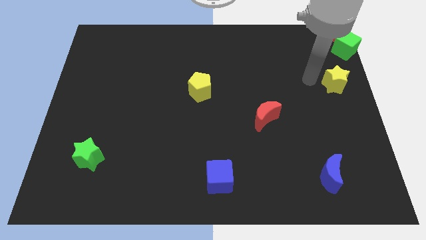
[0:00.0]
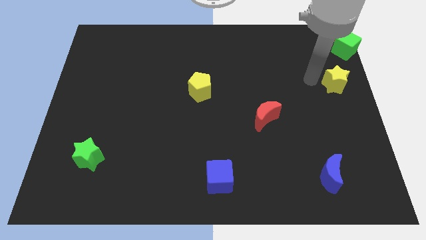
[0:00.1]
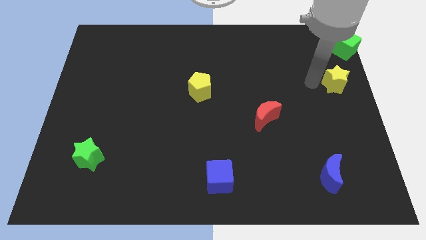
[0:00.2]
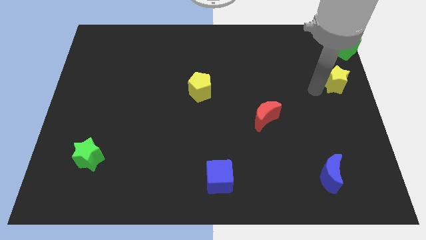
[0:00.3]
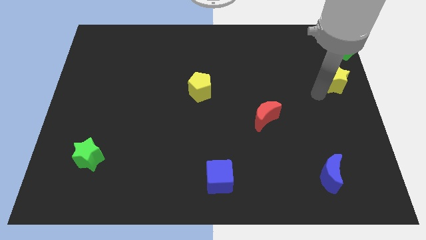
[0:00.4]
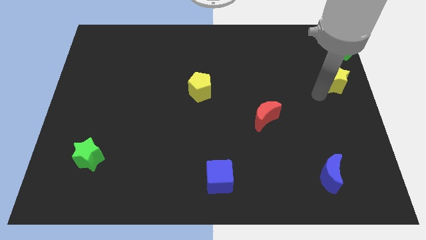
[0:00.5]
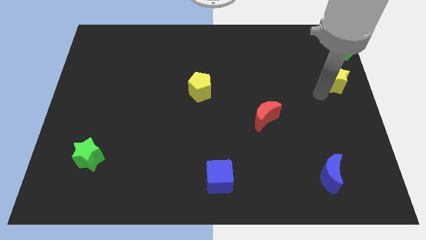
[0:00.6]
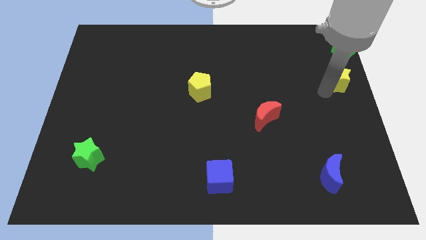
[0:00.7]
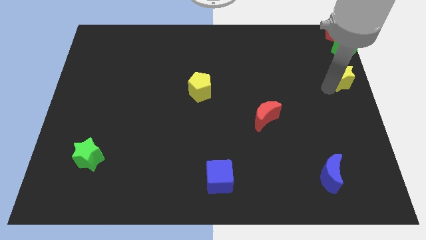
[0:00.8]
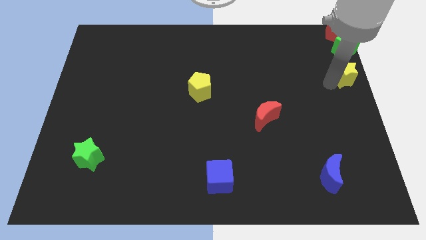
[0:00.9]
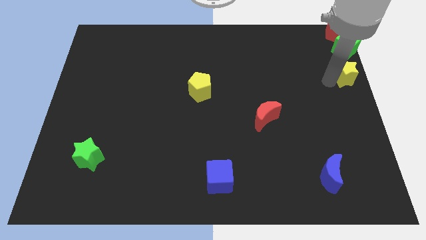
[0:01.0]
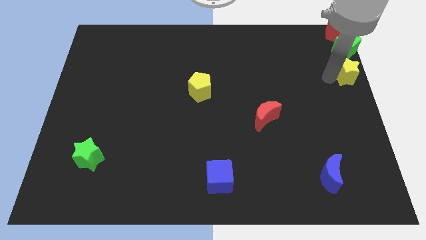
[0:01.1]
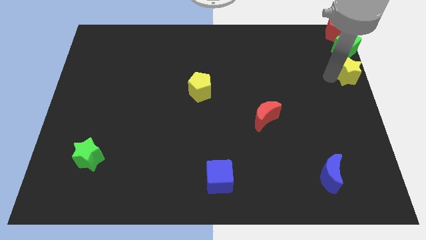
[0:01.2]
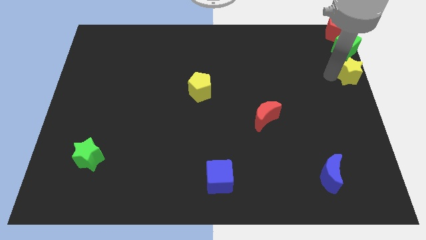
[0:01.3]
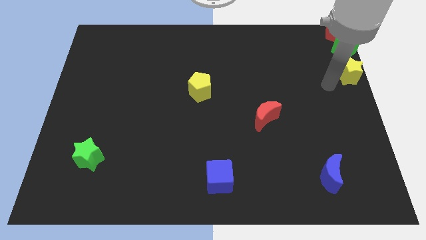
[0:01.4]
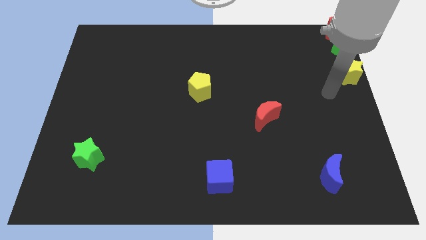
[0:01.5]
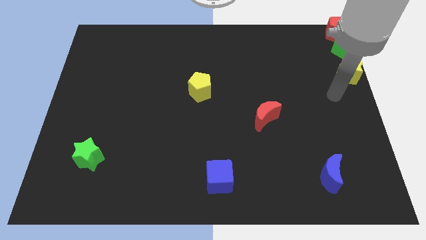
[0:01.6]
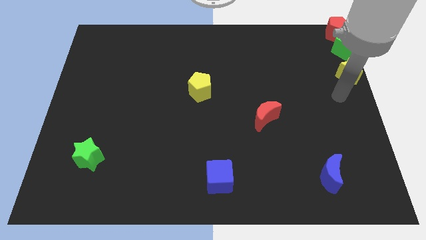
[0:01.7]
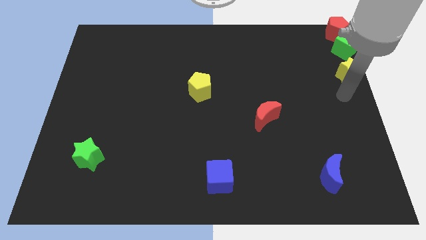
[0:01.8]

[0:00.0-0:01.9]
move the yellow star to the bottom side of the green cube

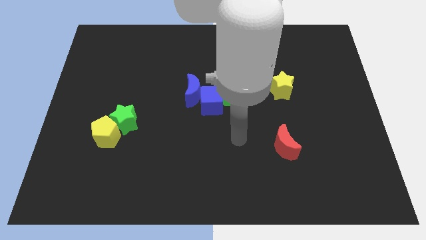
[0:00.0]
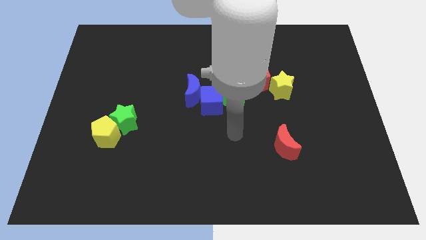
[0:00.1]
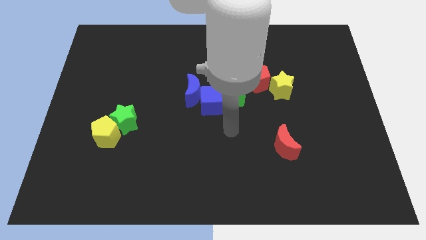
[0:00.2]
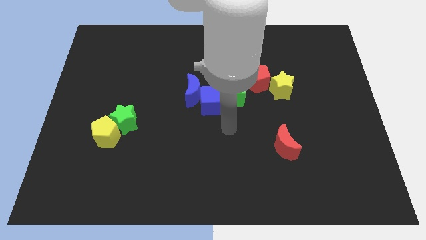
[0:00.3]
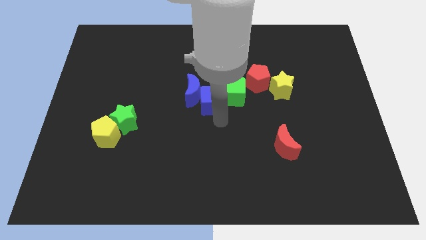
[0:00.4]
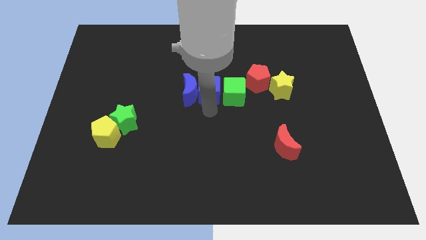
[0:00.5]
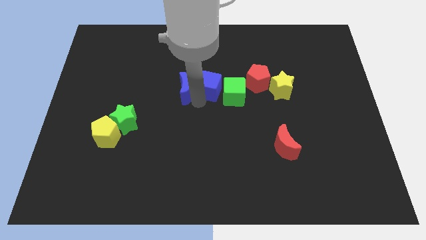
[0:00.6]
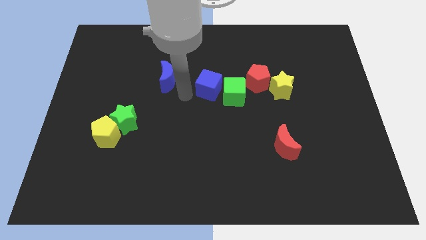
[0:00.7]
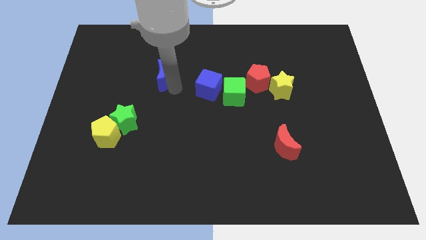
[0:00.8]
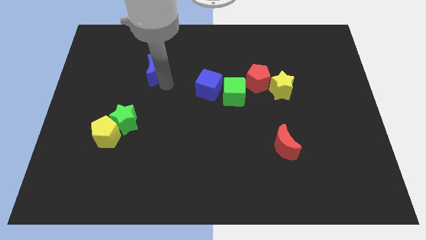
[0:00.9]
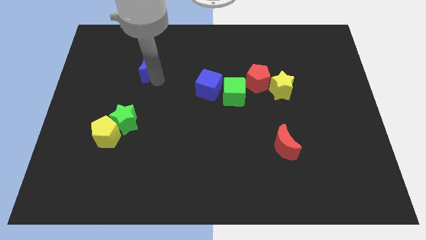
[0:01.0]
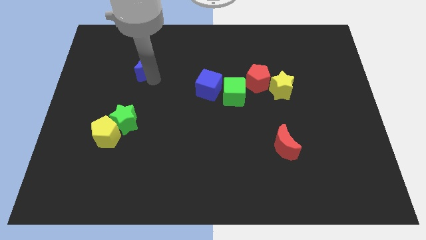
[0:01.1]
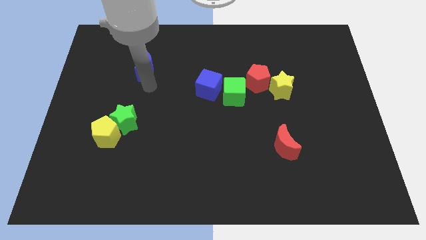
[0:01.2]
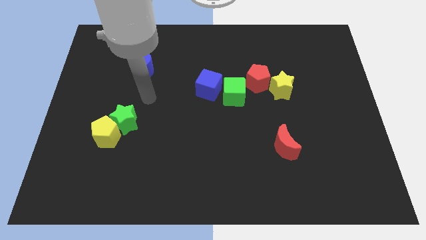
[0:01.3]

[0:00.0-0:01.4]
separate the blue moon from the blue cube

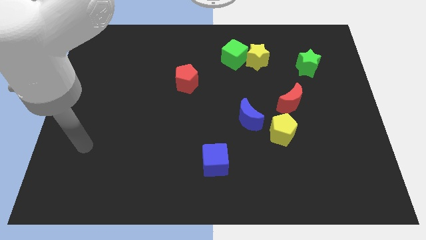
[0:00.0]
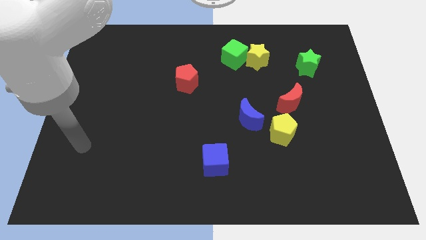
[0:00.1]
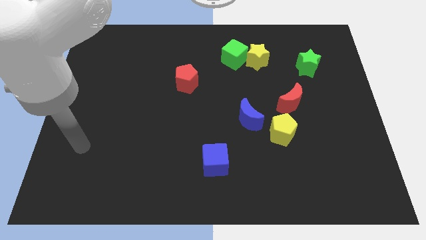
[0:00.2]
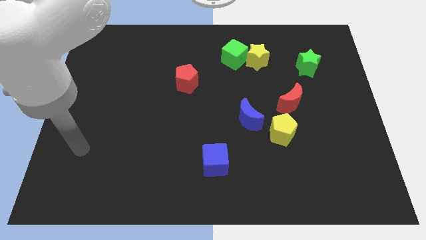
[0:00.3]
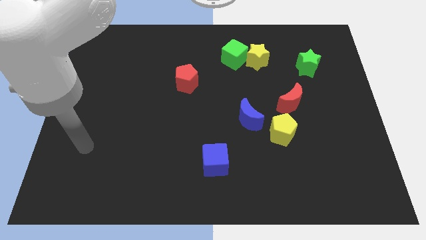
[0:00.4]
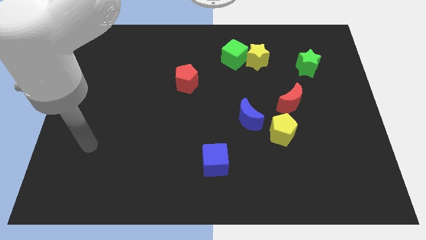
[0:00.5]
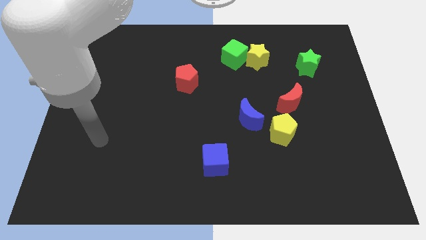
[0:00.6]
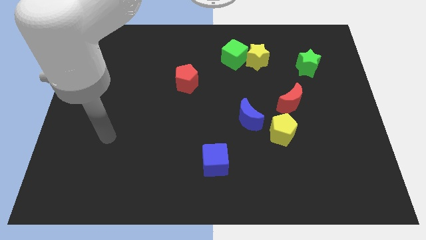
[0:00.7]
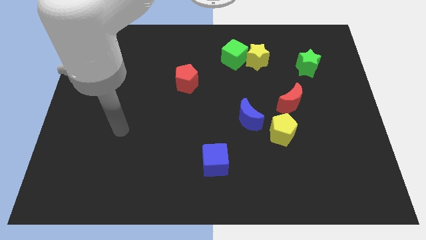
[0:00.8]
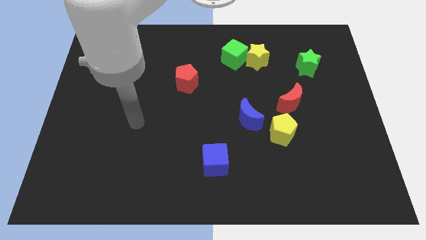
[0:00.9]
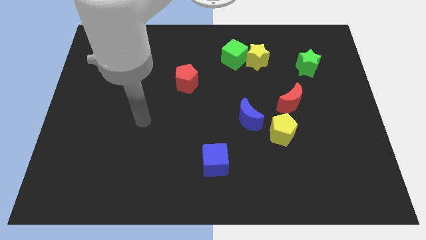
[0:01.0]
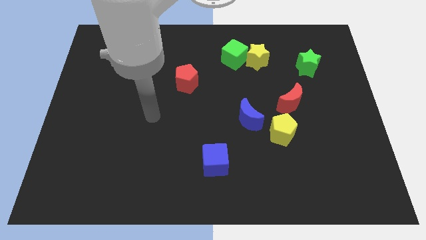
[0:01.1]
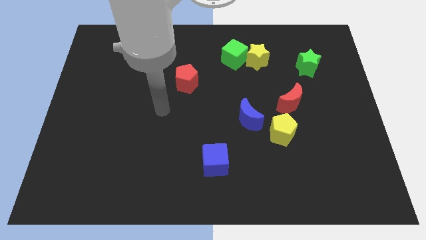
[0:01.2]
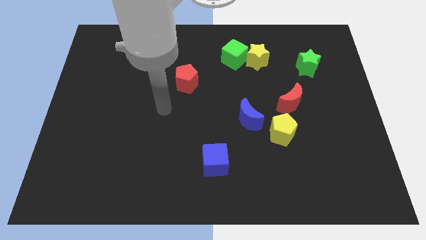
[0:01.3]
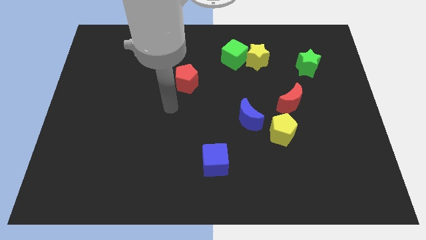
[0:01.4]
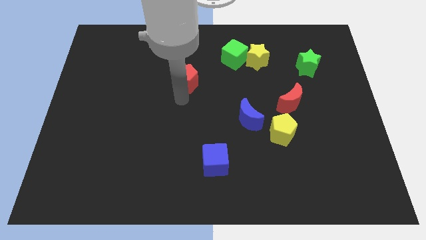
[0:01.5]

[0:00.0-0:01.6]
move the arm below the red pentagon

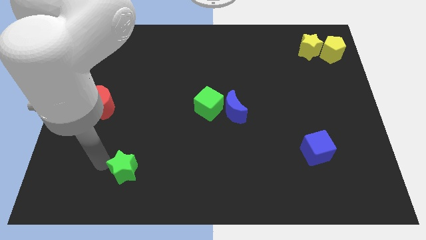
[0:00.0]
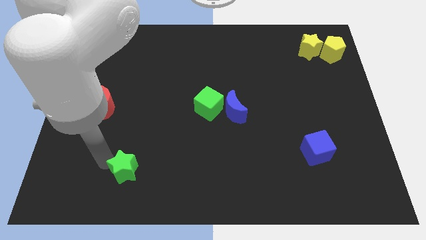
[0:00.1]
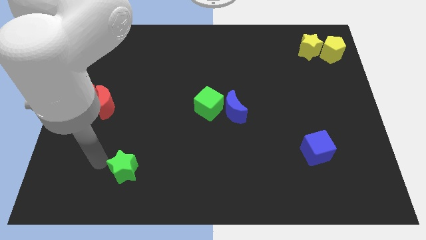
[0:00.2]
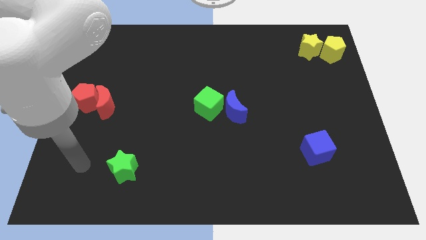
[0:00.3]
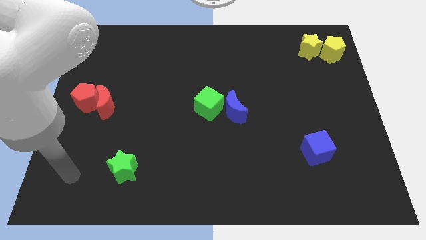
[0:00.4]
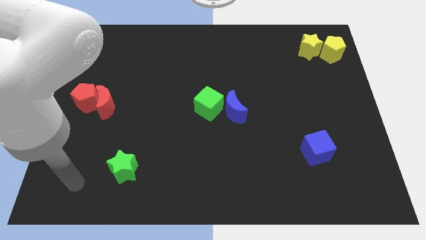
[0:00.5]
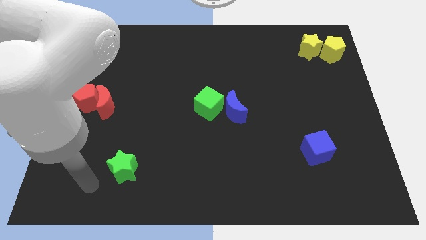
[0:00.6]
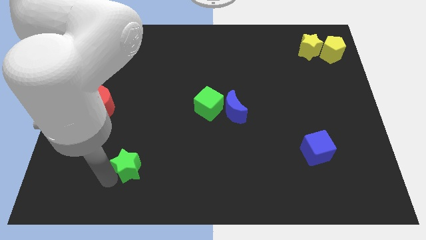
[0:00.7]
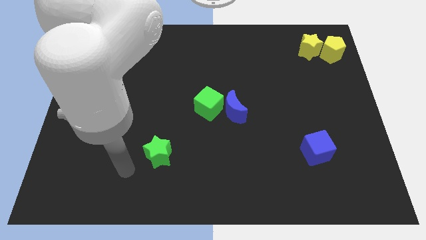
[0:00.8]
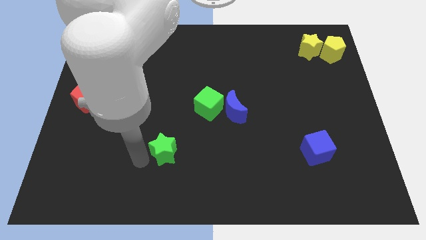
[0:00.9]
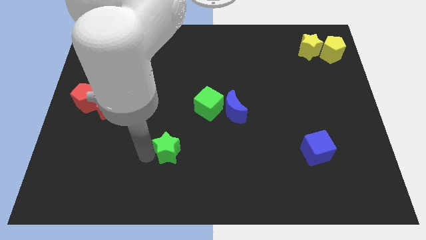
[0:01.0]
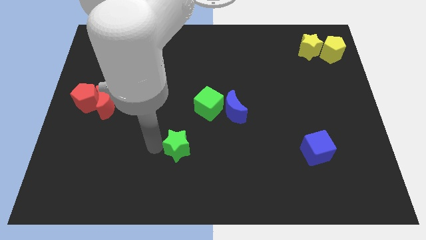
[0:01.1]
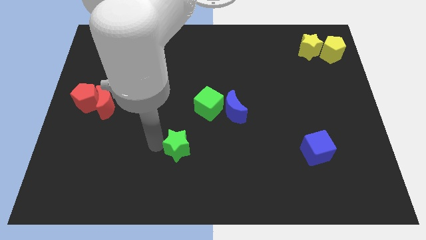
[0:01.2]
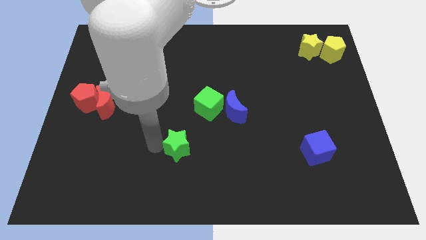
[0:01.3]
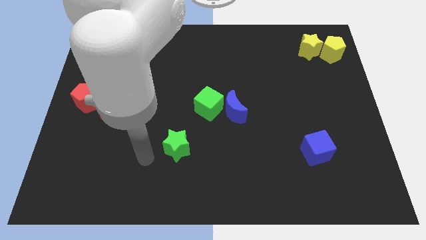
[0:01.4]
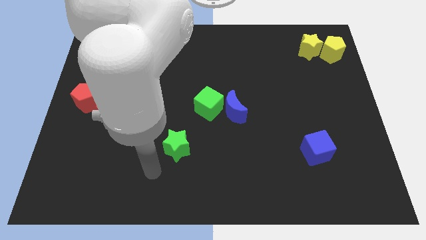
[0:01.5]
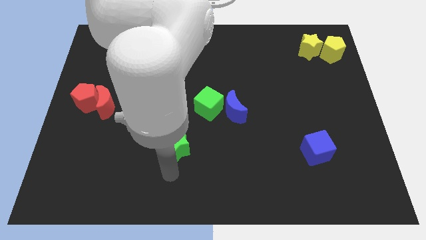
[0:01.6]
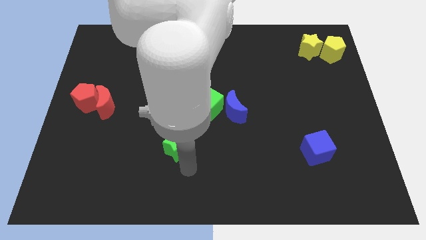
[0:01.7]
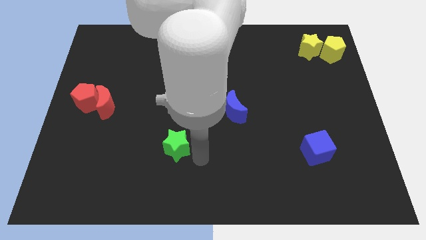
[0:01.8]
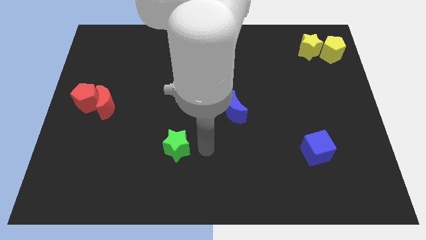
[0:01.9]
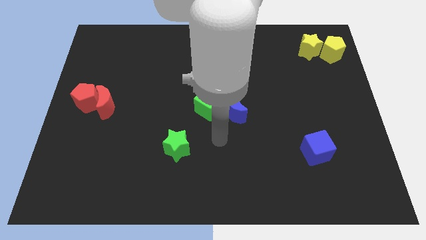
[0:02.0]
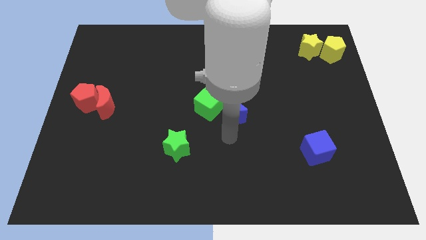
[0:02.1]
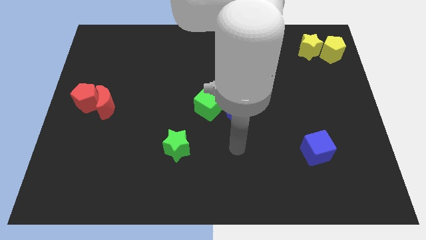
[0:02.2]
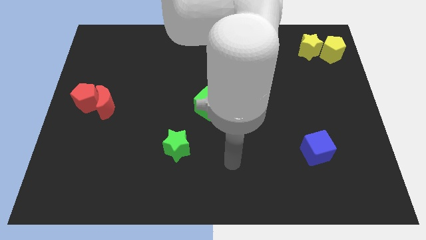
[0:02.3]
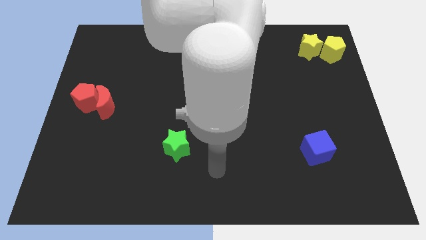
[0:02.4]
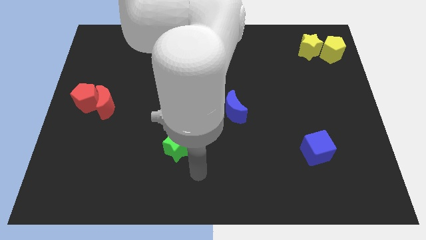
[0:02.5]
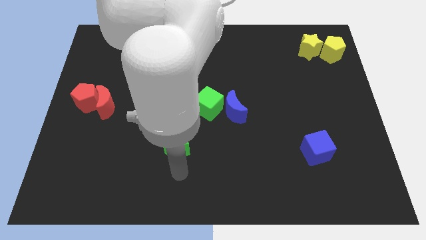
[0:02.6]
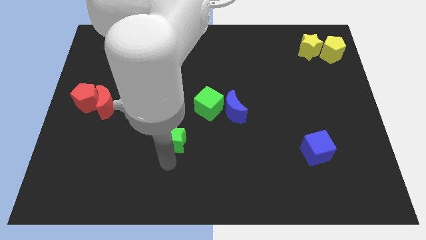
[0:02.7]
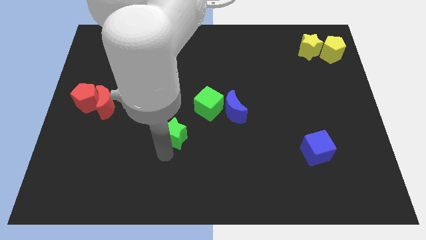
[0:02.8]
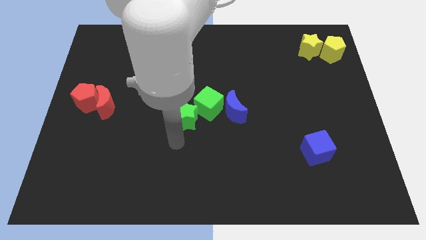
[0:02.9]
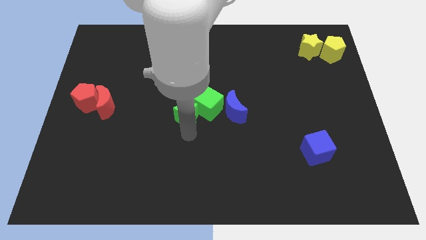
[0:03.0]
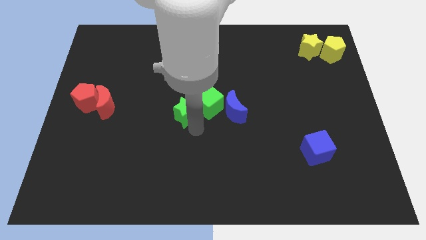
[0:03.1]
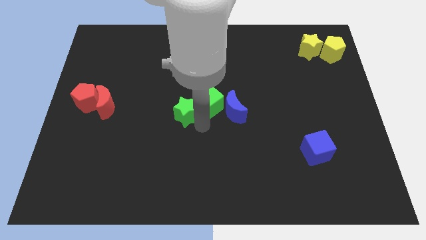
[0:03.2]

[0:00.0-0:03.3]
move green star beside green cube

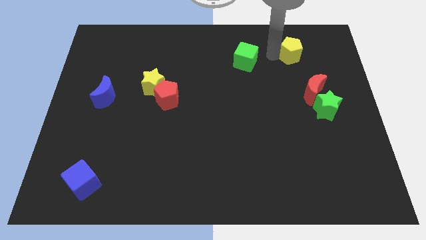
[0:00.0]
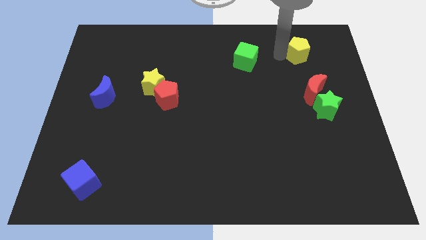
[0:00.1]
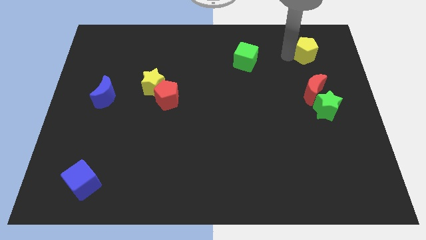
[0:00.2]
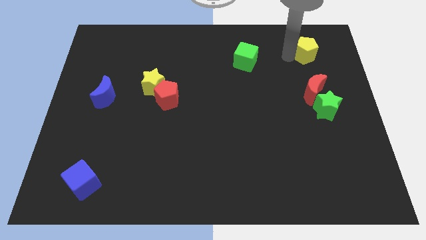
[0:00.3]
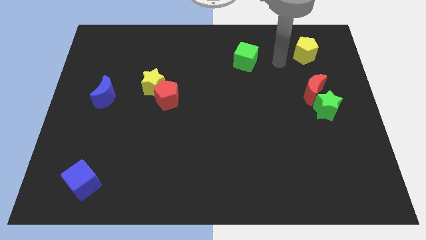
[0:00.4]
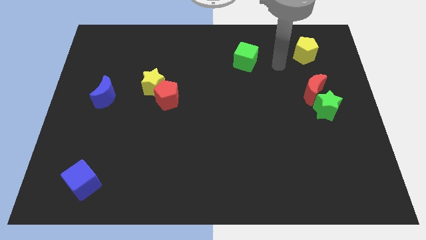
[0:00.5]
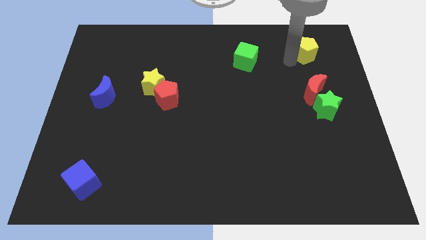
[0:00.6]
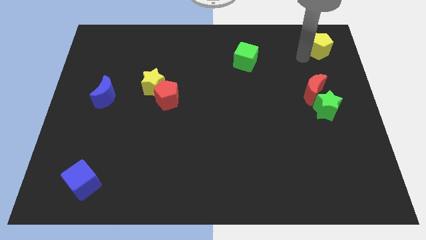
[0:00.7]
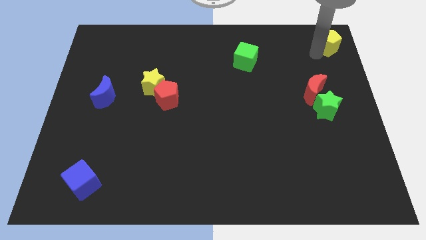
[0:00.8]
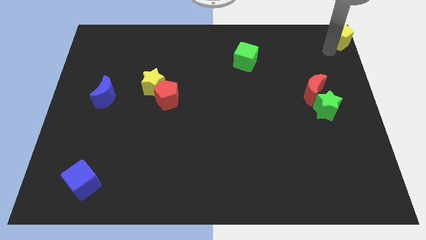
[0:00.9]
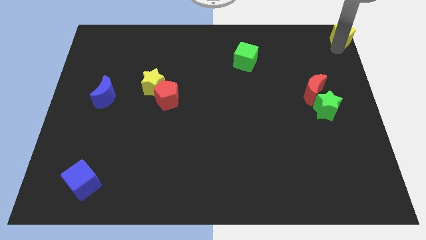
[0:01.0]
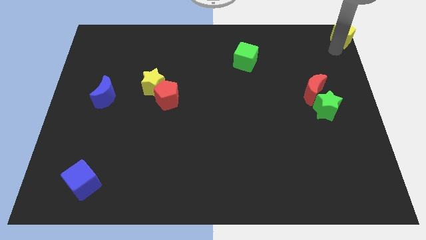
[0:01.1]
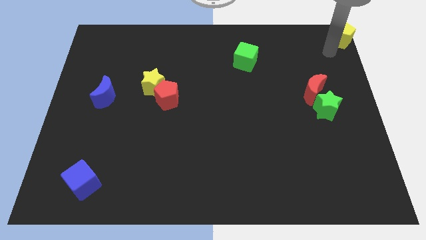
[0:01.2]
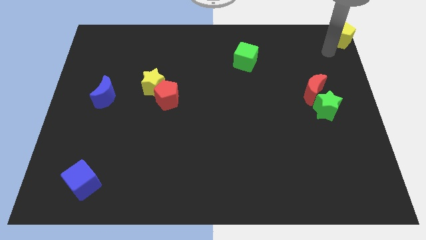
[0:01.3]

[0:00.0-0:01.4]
move the yellow pentagon to the top right corner of the board
